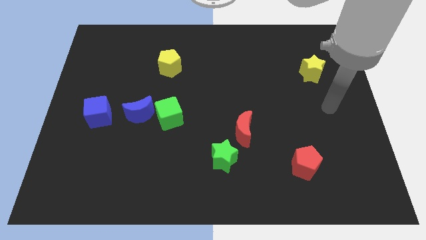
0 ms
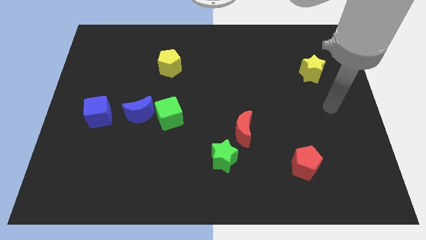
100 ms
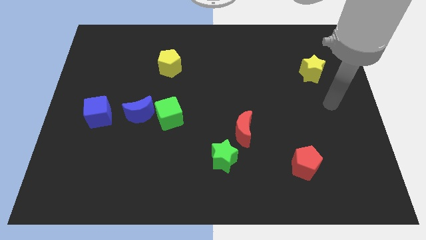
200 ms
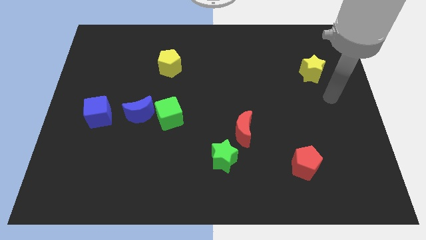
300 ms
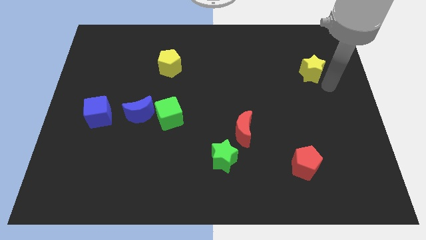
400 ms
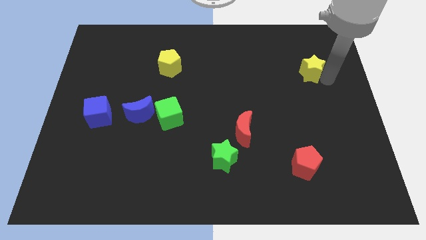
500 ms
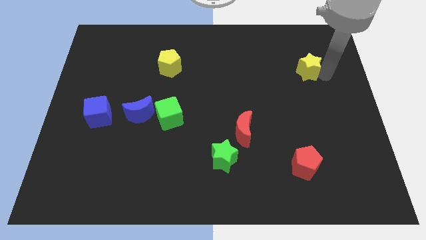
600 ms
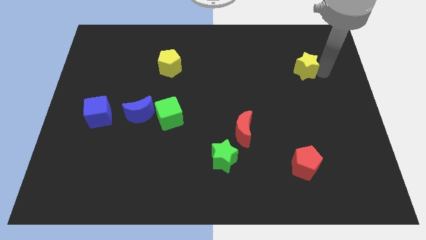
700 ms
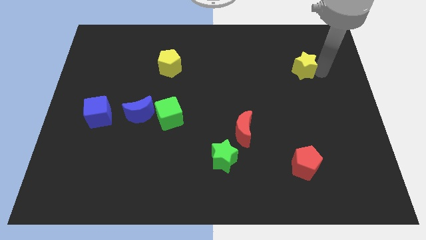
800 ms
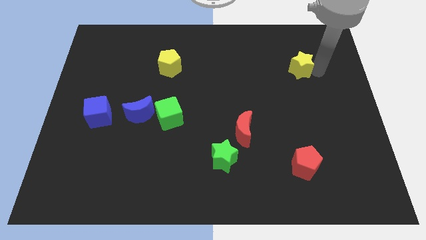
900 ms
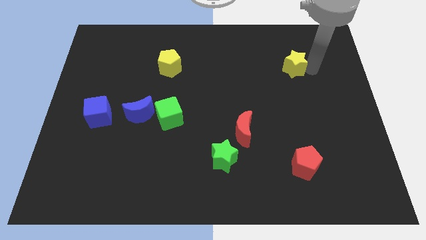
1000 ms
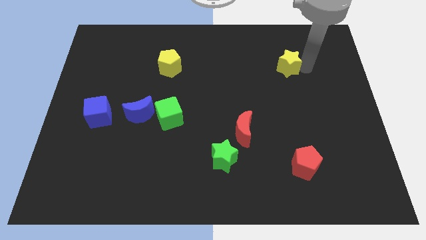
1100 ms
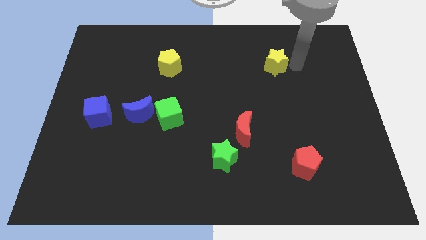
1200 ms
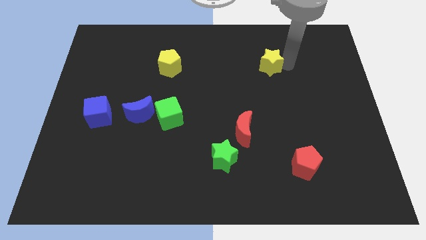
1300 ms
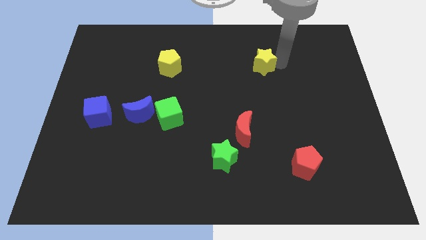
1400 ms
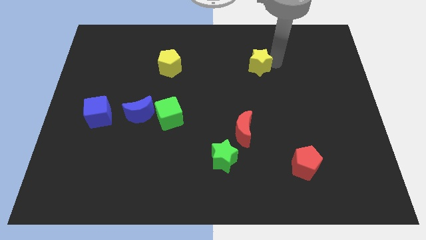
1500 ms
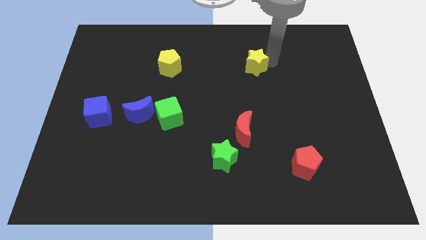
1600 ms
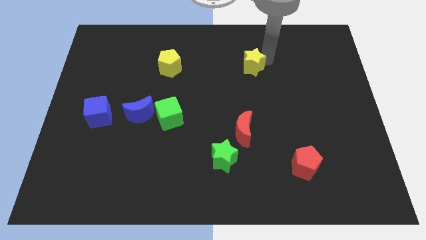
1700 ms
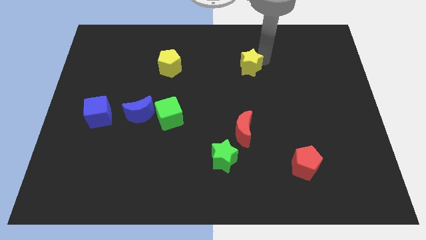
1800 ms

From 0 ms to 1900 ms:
move yellow star towards center

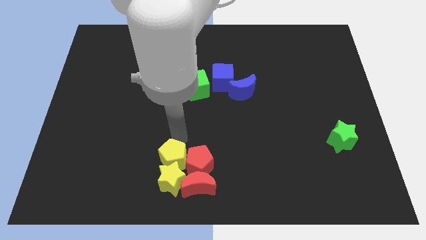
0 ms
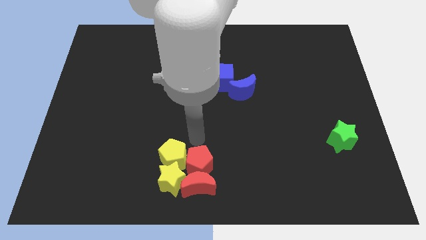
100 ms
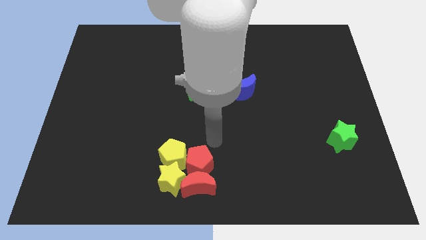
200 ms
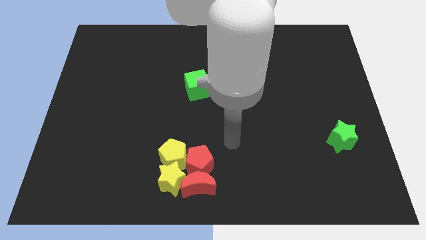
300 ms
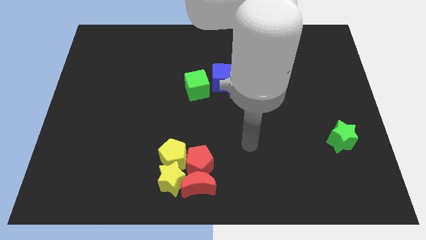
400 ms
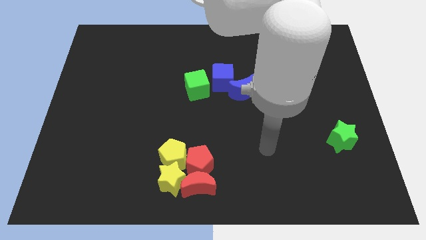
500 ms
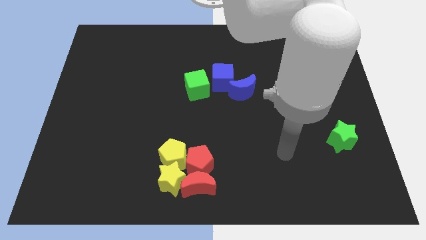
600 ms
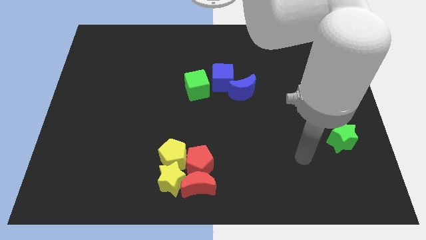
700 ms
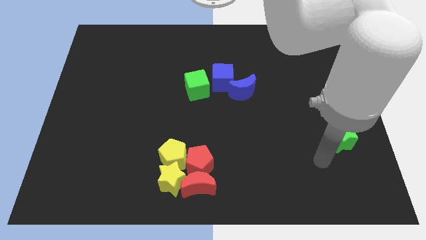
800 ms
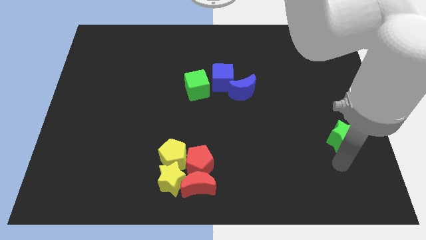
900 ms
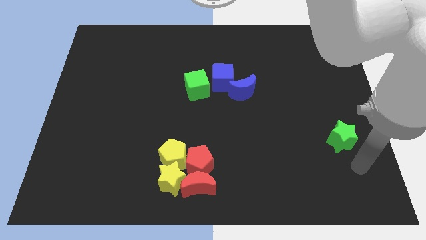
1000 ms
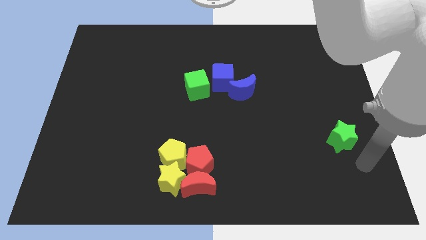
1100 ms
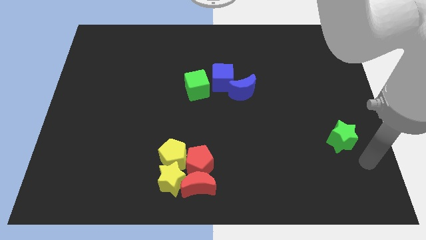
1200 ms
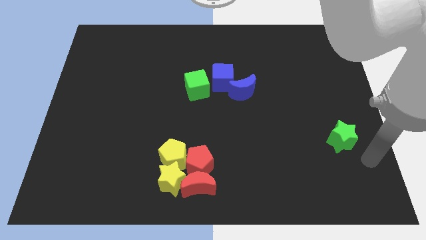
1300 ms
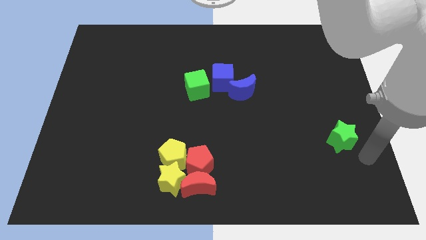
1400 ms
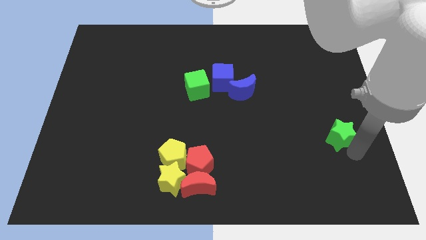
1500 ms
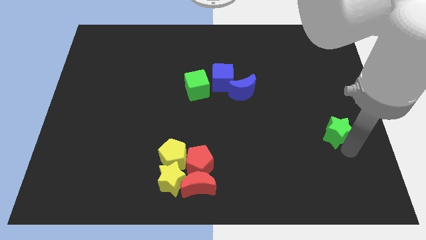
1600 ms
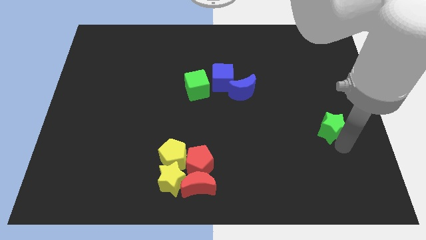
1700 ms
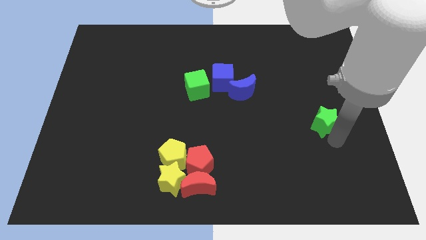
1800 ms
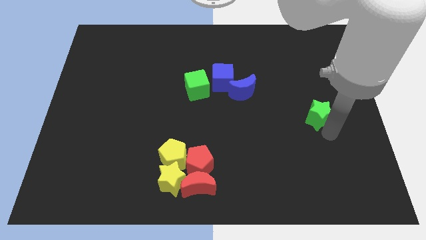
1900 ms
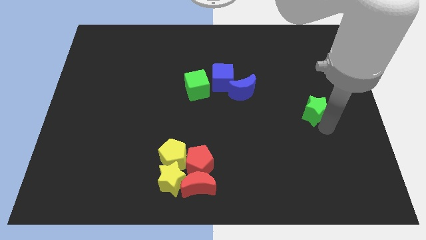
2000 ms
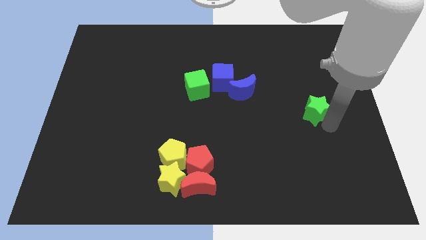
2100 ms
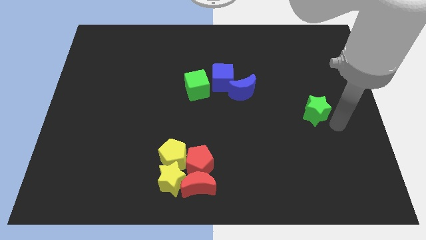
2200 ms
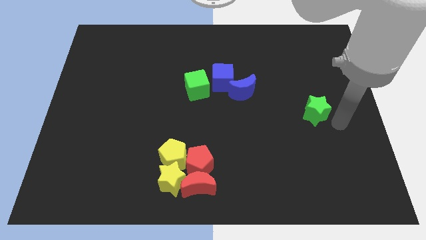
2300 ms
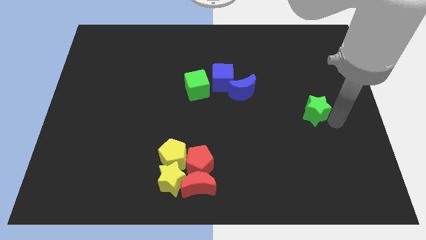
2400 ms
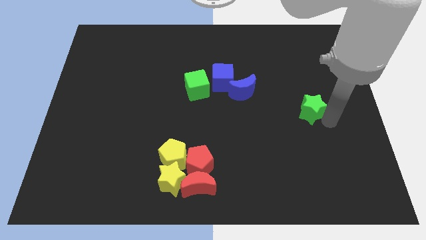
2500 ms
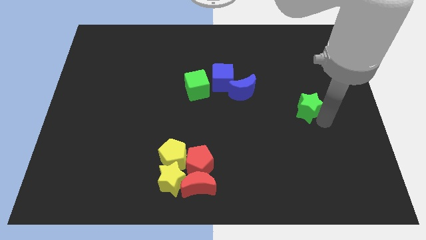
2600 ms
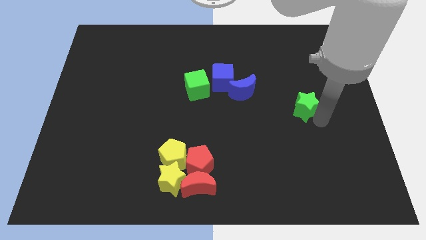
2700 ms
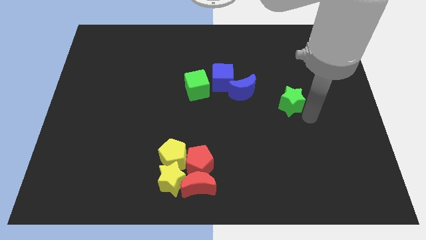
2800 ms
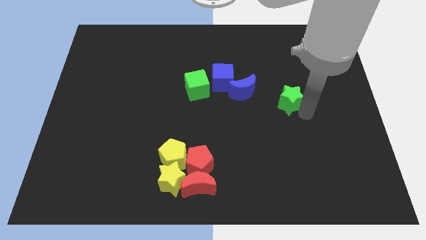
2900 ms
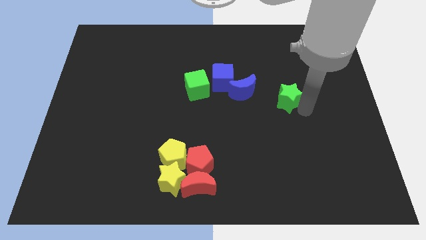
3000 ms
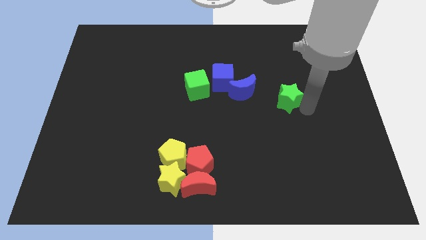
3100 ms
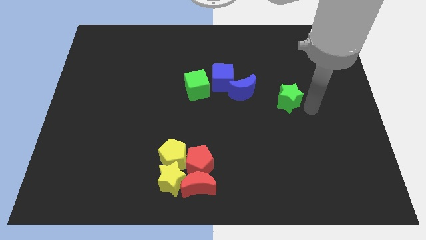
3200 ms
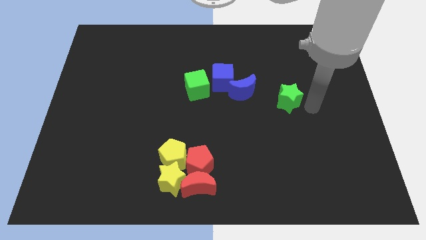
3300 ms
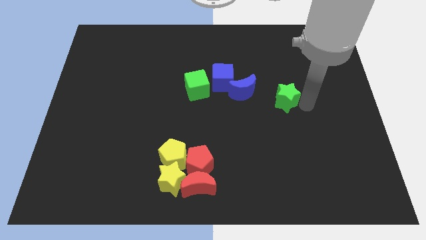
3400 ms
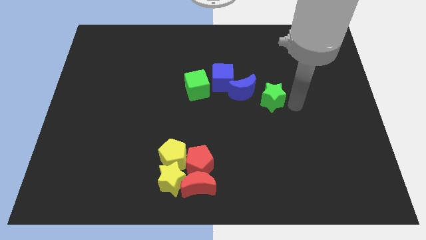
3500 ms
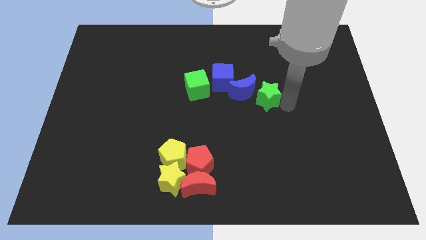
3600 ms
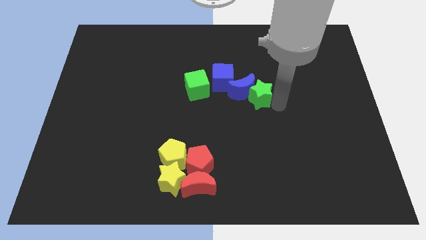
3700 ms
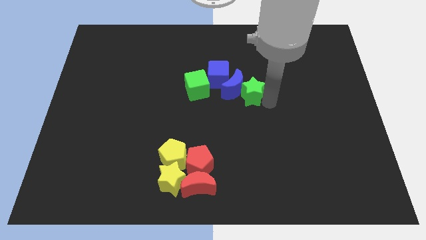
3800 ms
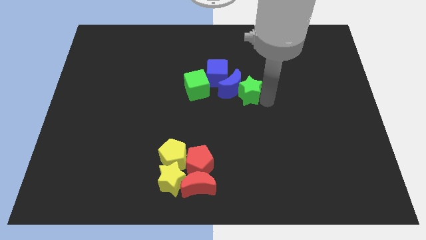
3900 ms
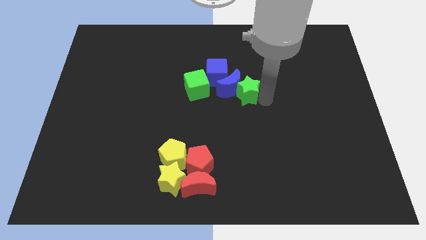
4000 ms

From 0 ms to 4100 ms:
move green star into the blue moon

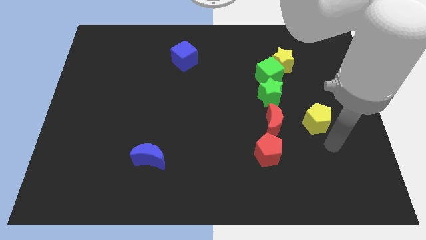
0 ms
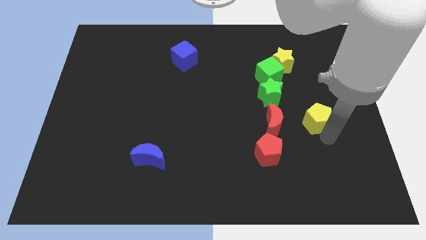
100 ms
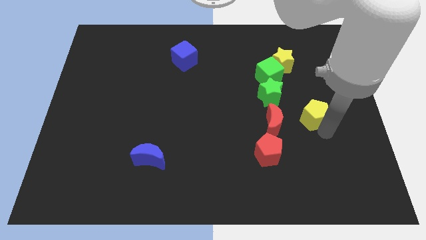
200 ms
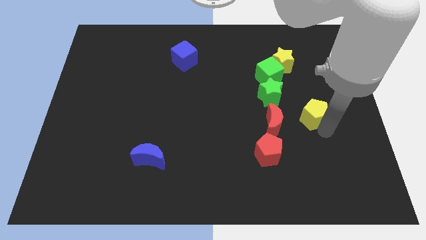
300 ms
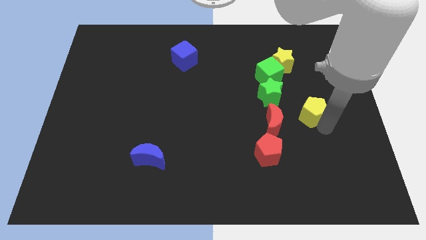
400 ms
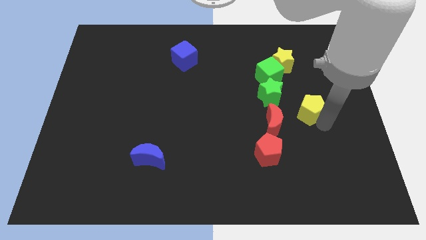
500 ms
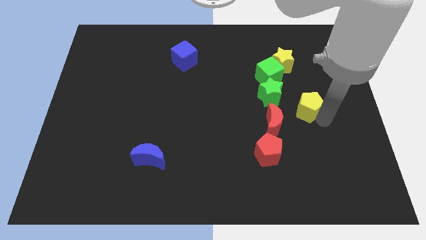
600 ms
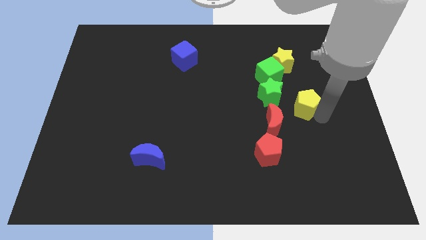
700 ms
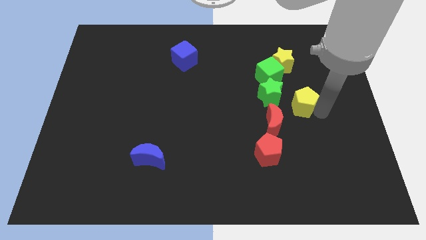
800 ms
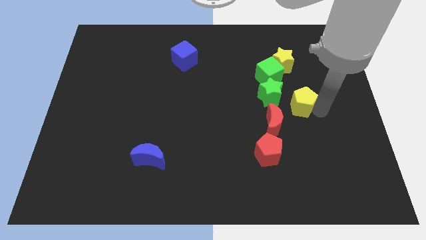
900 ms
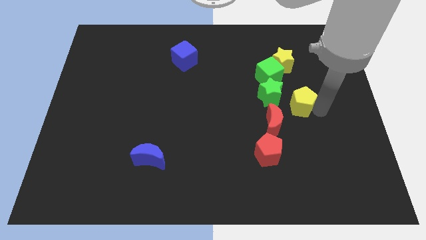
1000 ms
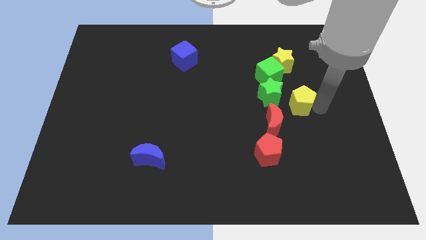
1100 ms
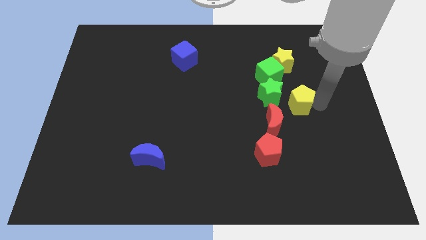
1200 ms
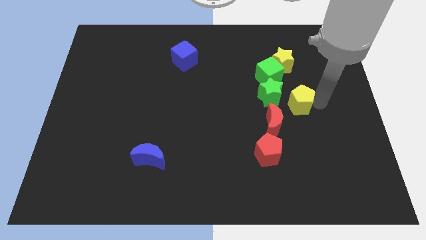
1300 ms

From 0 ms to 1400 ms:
place the yellow pentagon on the right side of green star

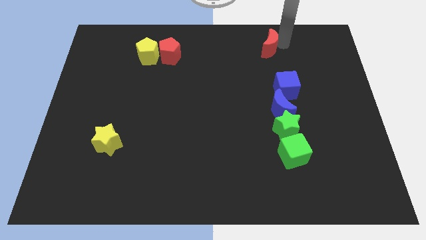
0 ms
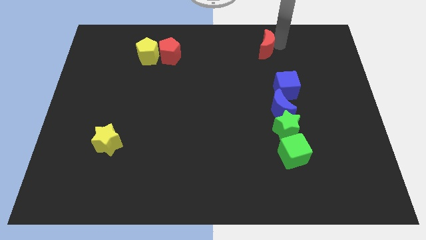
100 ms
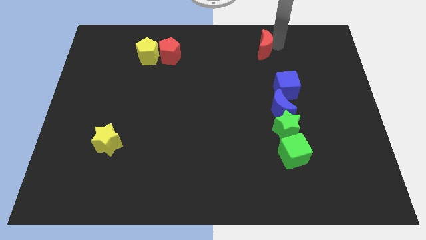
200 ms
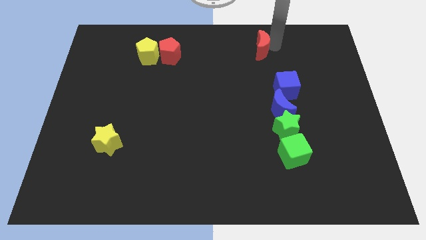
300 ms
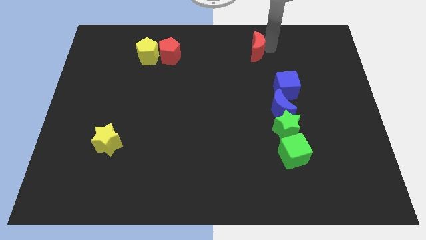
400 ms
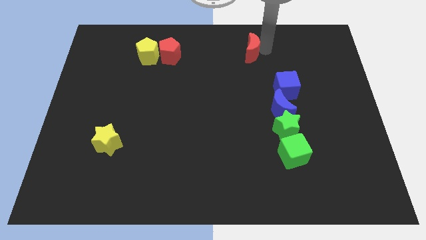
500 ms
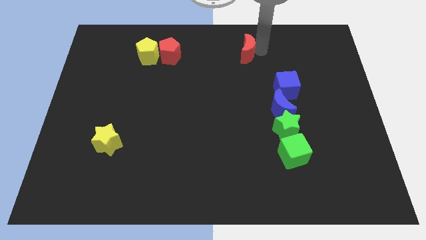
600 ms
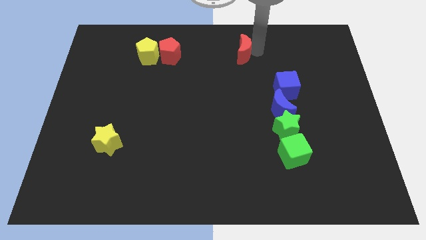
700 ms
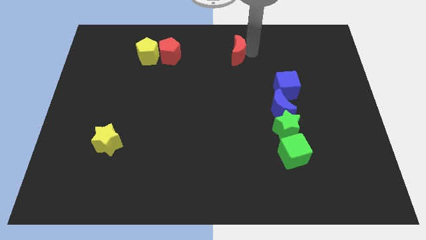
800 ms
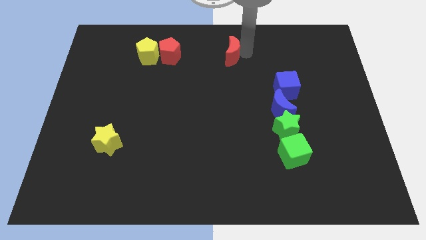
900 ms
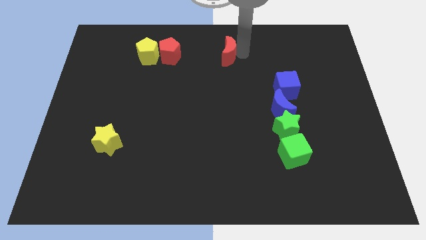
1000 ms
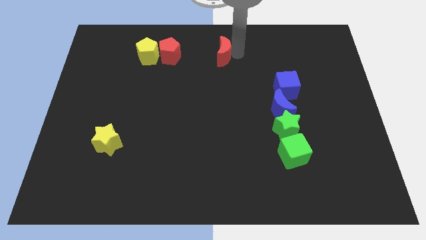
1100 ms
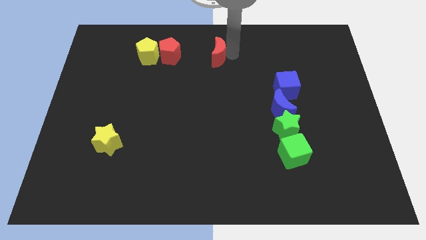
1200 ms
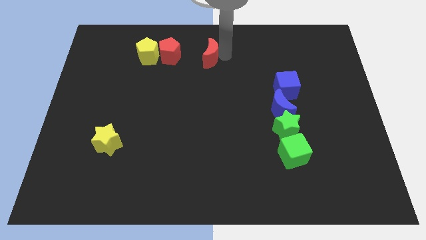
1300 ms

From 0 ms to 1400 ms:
push the red crescent on top center of the board
